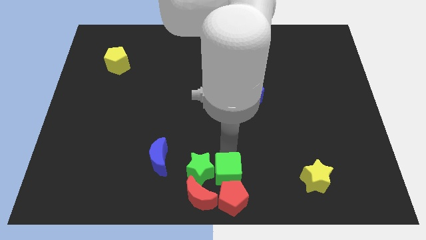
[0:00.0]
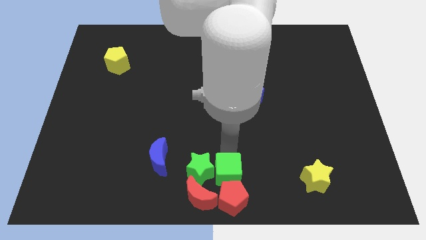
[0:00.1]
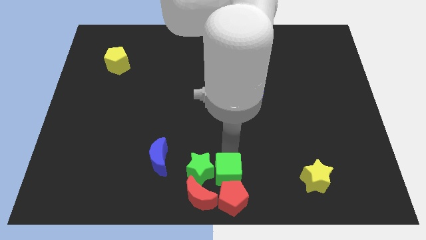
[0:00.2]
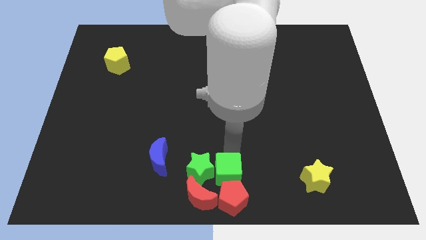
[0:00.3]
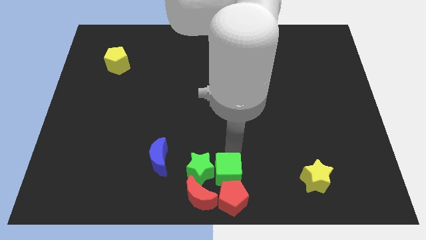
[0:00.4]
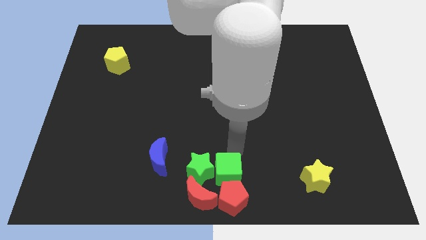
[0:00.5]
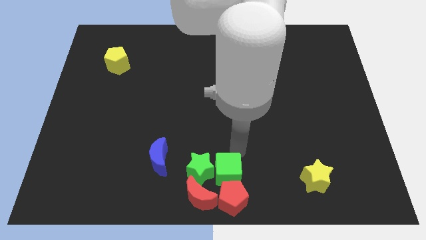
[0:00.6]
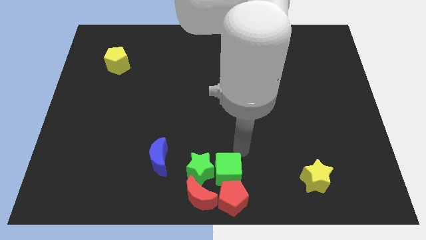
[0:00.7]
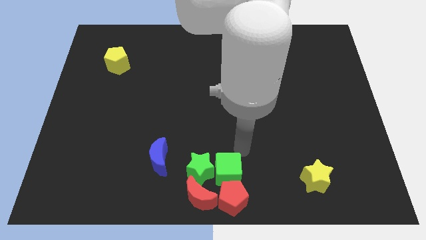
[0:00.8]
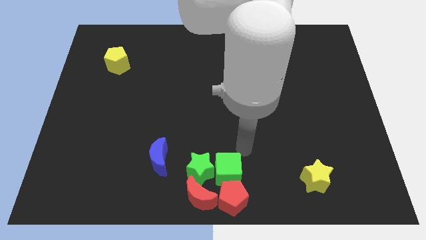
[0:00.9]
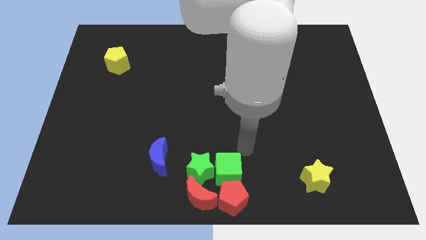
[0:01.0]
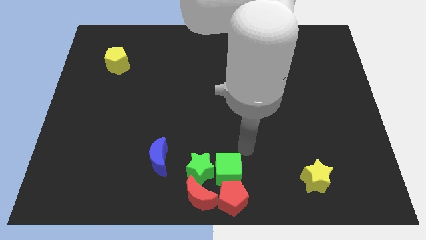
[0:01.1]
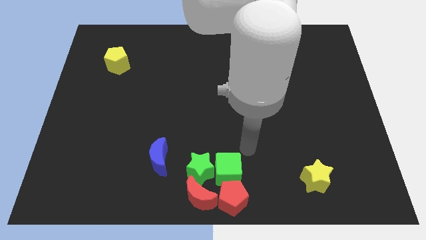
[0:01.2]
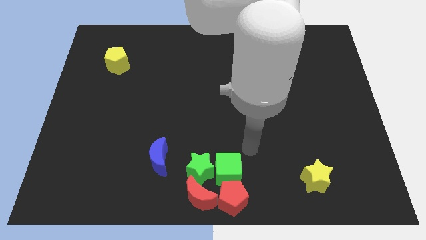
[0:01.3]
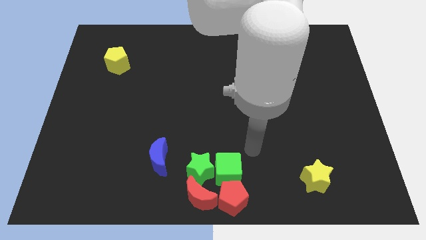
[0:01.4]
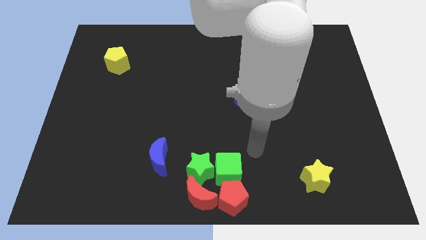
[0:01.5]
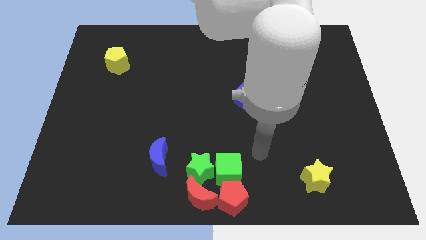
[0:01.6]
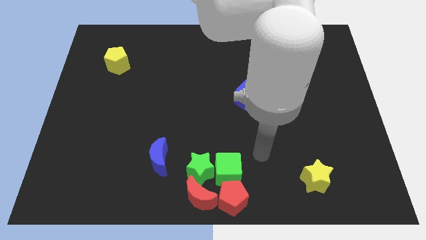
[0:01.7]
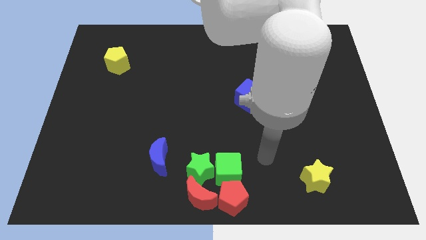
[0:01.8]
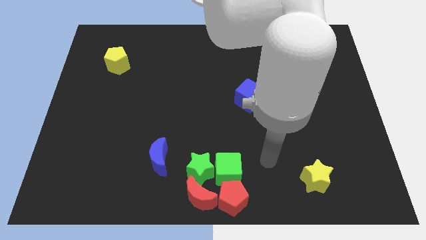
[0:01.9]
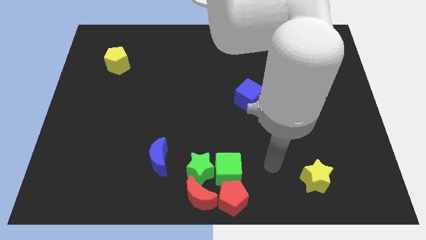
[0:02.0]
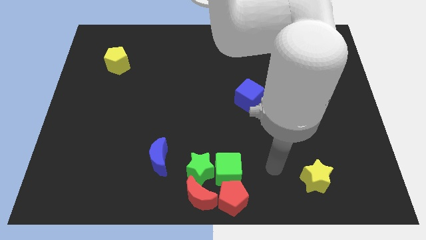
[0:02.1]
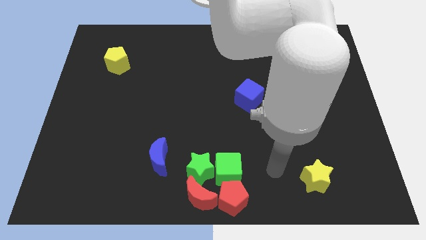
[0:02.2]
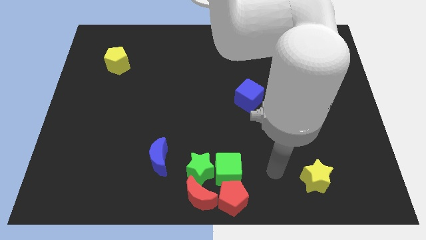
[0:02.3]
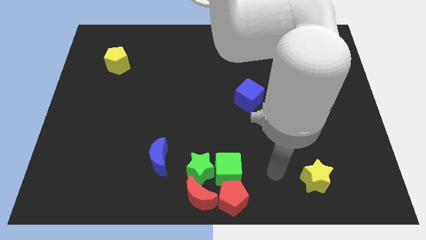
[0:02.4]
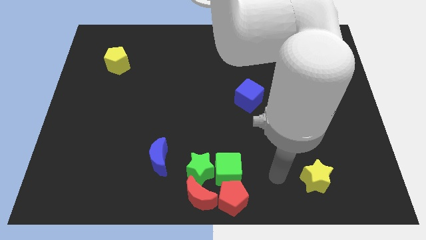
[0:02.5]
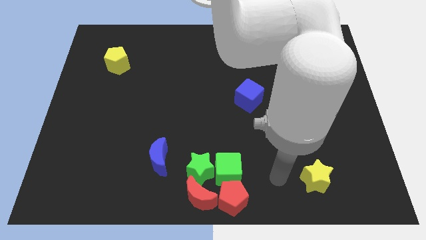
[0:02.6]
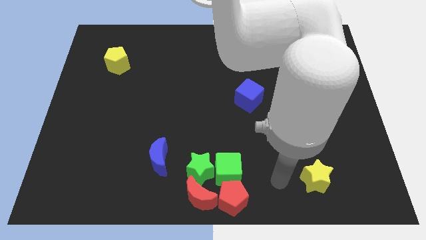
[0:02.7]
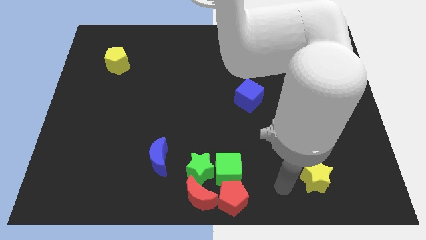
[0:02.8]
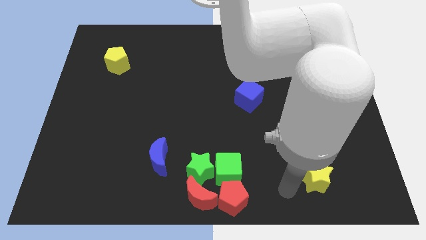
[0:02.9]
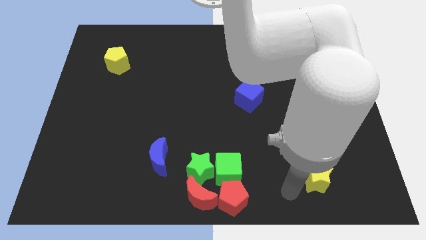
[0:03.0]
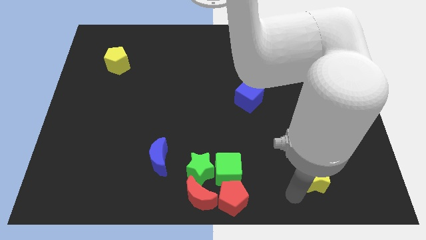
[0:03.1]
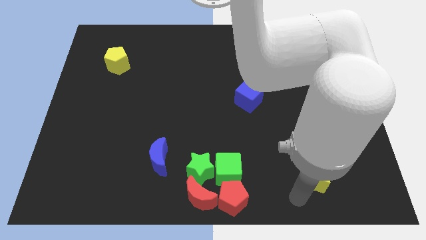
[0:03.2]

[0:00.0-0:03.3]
move your arm close to the yellow star

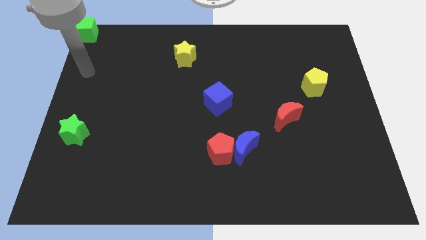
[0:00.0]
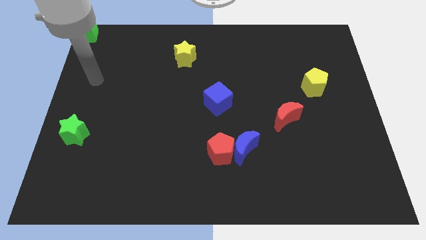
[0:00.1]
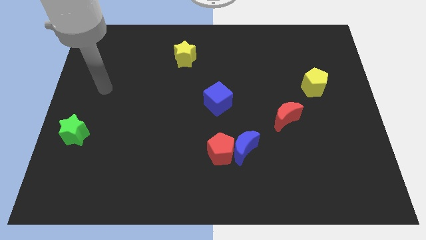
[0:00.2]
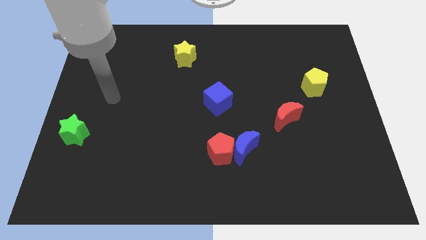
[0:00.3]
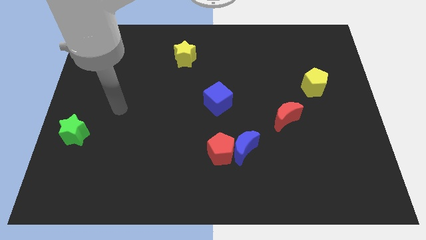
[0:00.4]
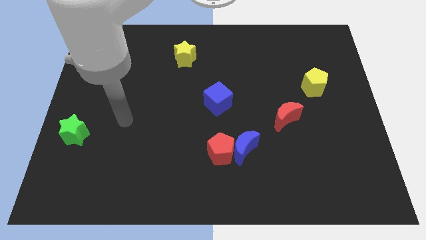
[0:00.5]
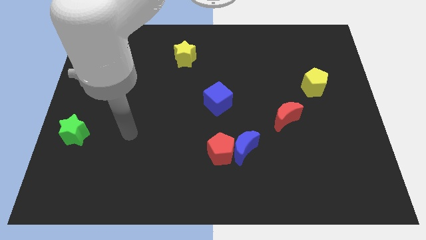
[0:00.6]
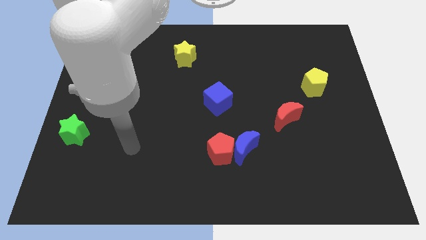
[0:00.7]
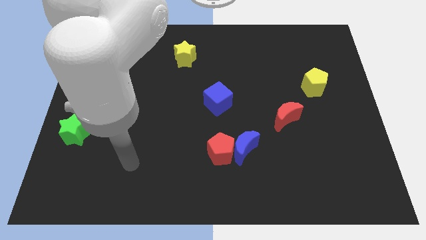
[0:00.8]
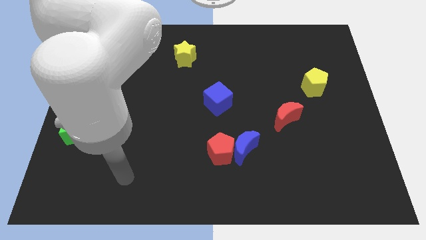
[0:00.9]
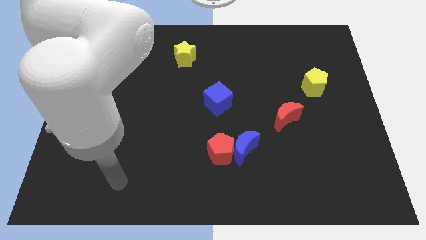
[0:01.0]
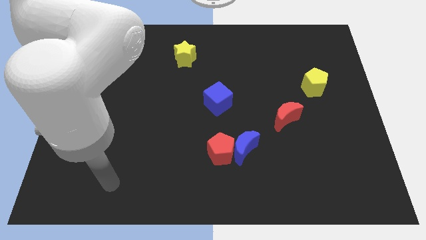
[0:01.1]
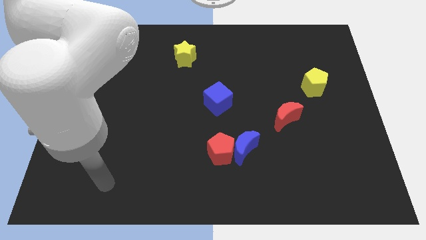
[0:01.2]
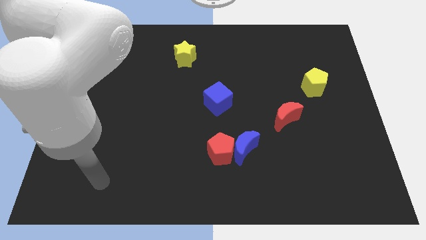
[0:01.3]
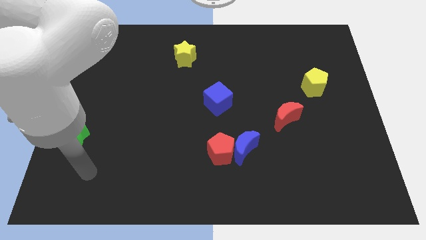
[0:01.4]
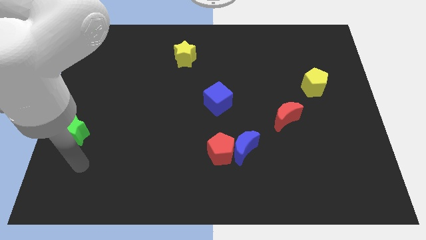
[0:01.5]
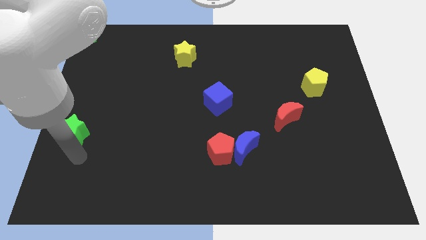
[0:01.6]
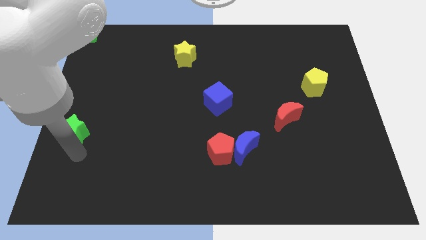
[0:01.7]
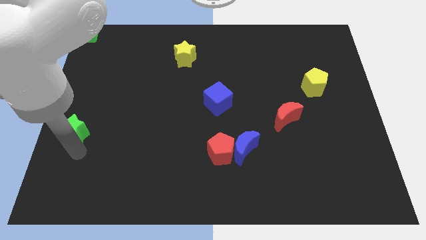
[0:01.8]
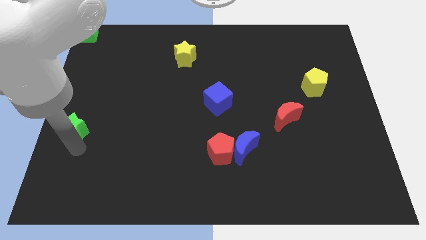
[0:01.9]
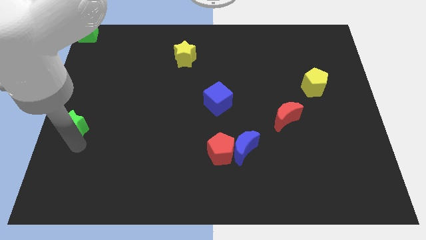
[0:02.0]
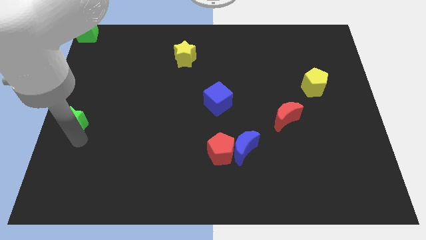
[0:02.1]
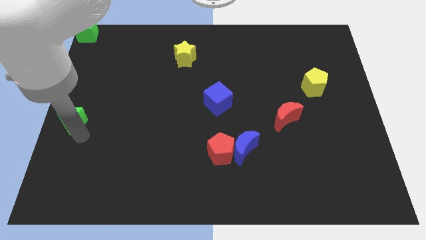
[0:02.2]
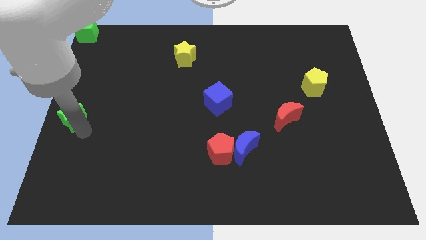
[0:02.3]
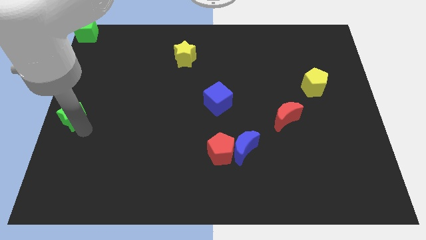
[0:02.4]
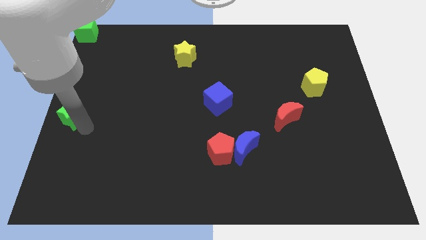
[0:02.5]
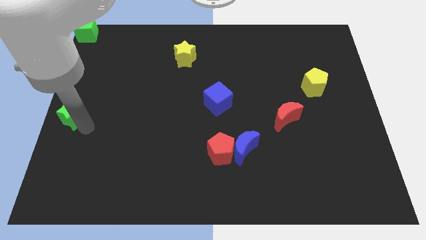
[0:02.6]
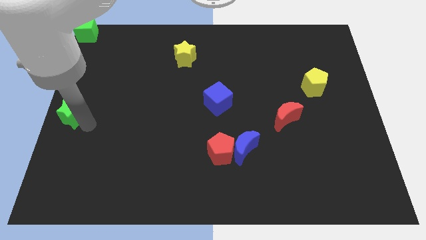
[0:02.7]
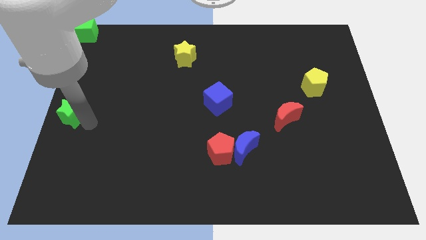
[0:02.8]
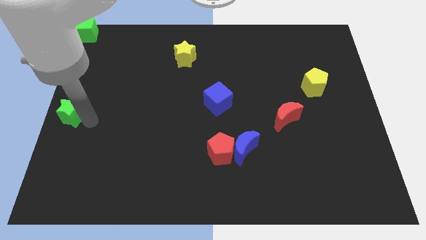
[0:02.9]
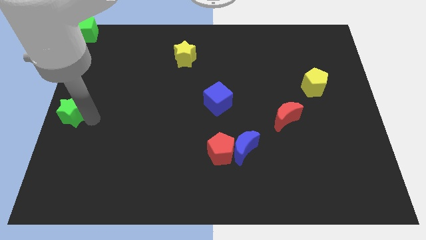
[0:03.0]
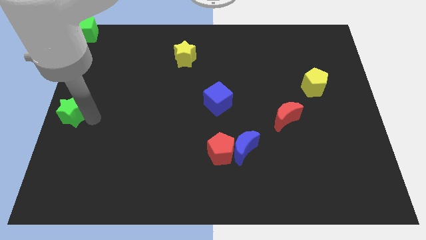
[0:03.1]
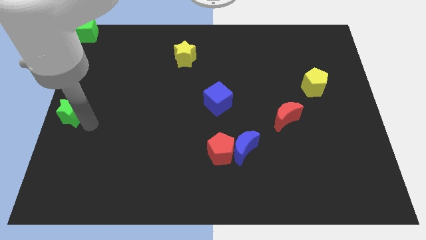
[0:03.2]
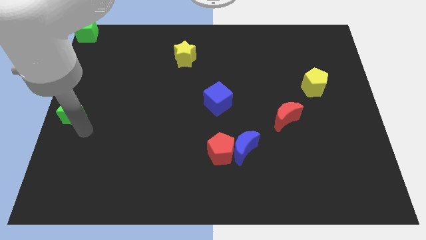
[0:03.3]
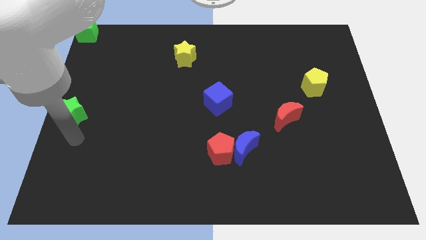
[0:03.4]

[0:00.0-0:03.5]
push the green star to the upwards

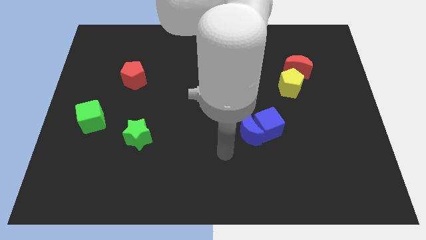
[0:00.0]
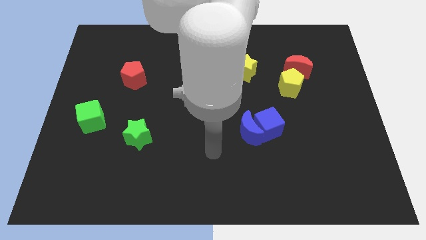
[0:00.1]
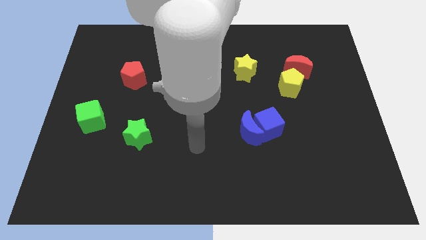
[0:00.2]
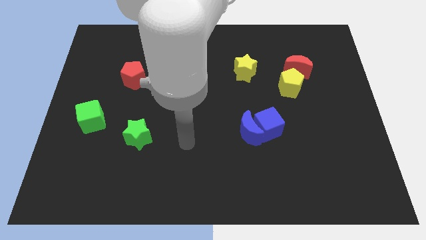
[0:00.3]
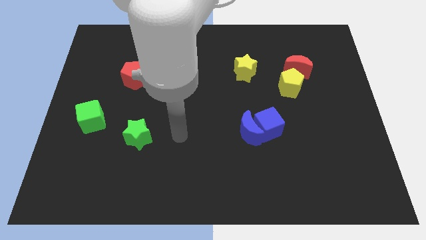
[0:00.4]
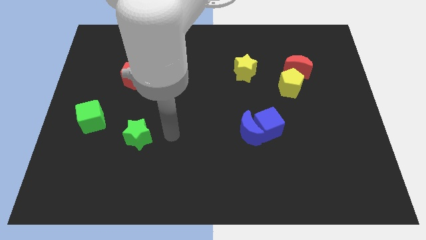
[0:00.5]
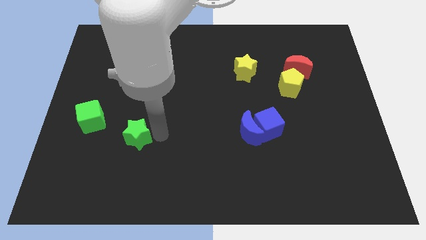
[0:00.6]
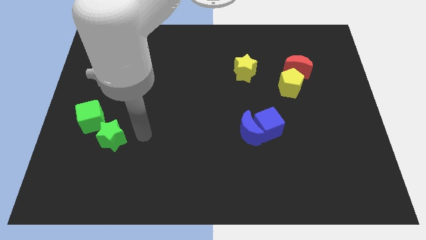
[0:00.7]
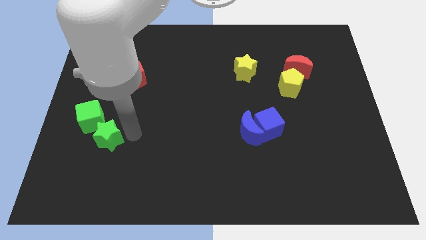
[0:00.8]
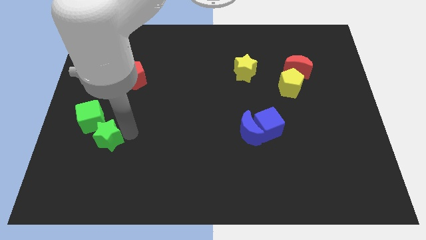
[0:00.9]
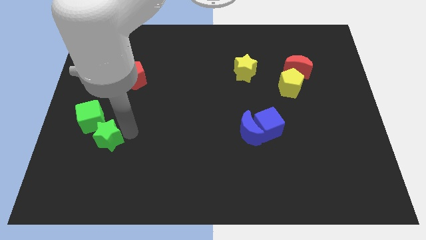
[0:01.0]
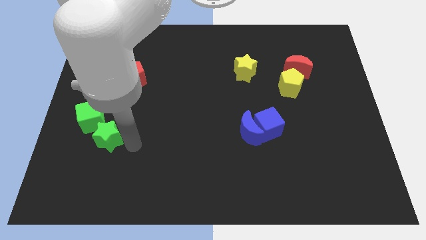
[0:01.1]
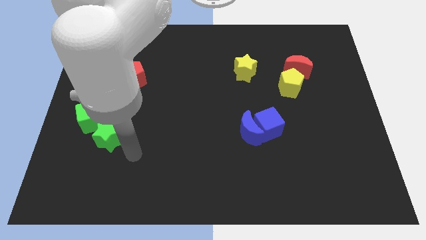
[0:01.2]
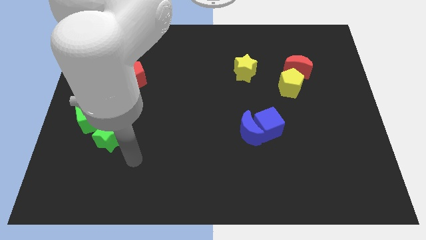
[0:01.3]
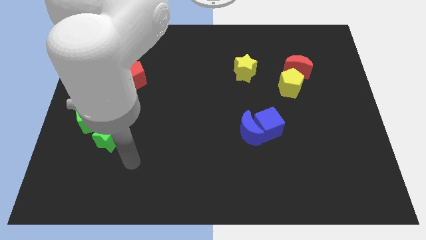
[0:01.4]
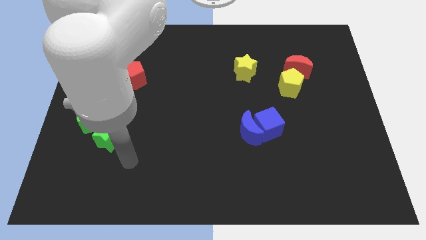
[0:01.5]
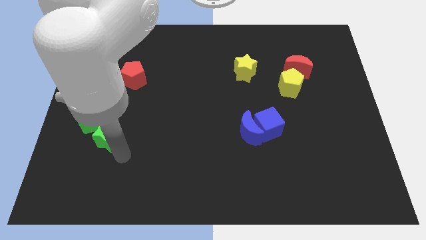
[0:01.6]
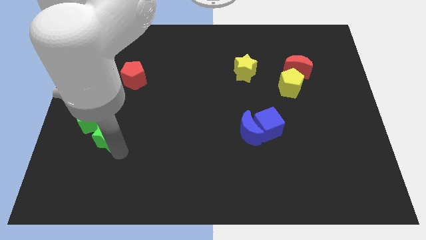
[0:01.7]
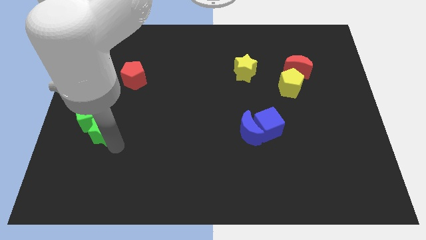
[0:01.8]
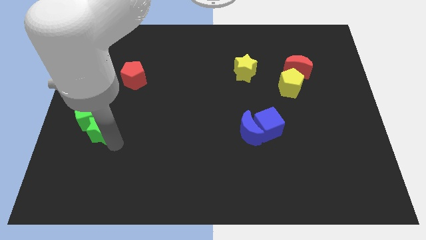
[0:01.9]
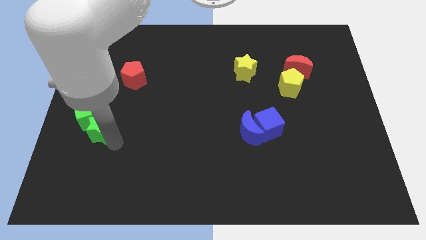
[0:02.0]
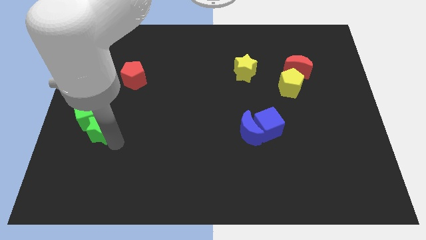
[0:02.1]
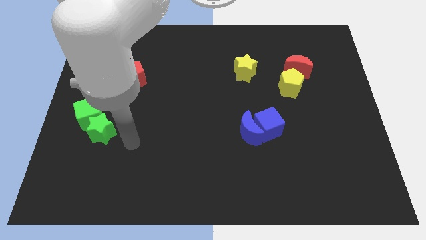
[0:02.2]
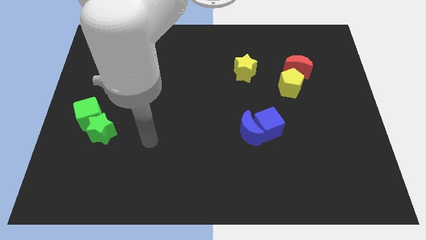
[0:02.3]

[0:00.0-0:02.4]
move the green star below the green cube
